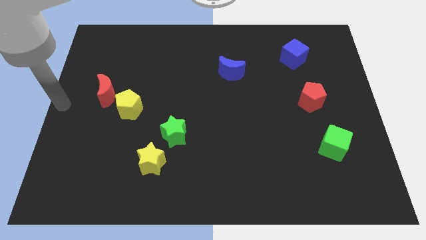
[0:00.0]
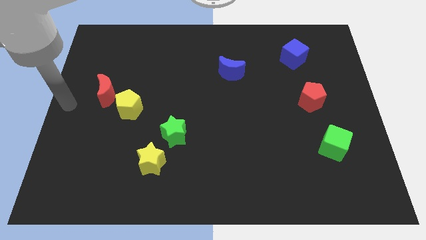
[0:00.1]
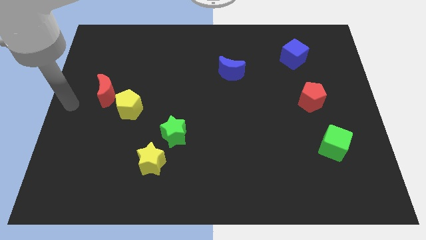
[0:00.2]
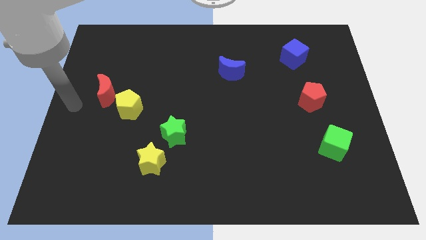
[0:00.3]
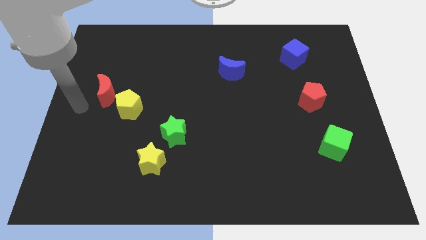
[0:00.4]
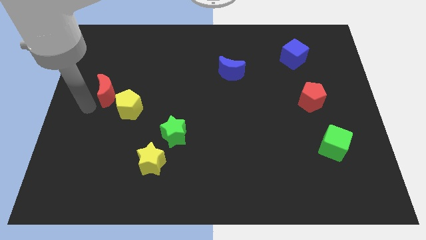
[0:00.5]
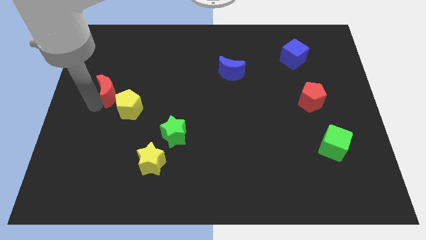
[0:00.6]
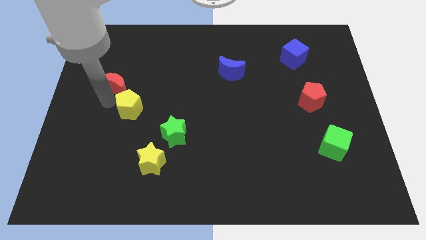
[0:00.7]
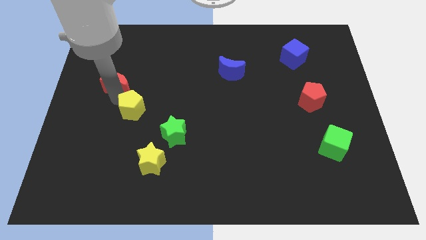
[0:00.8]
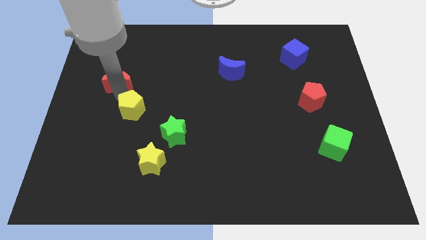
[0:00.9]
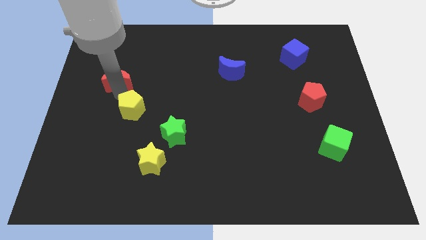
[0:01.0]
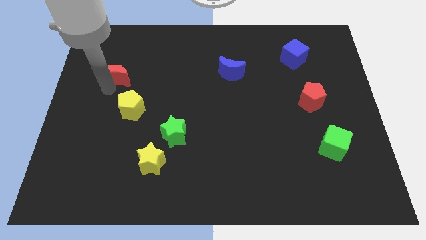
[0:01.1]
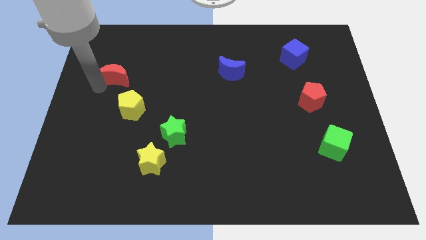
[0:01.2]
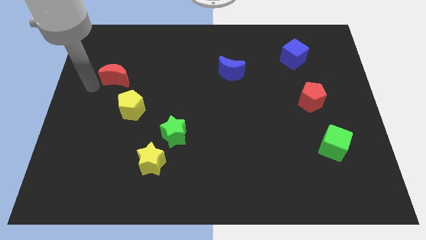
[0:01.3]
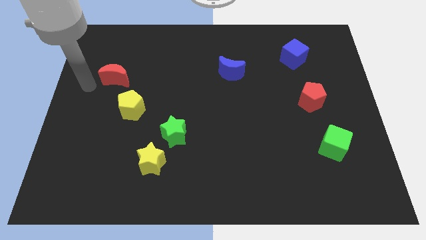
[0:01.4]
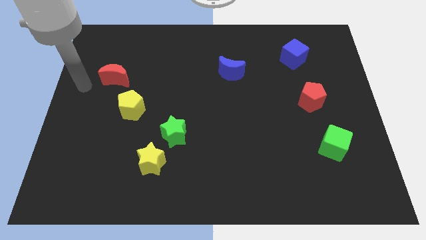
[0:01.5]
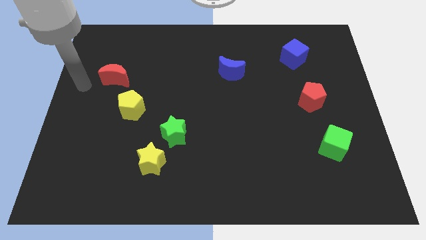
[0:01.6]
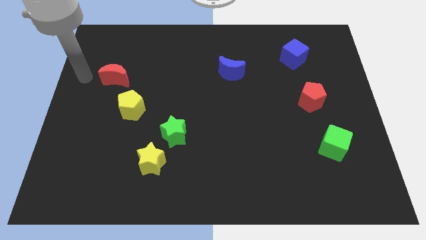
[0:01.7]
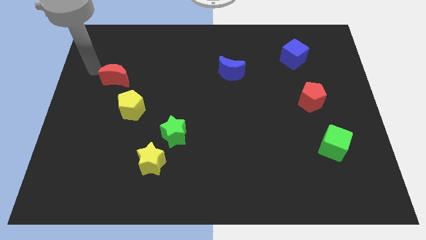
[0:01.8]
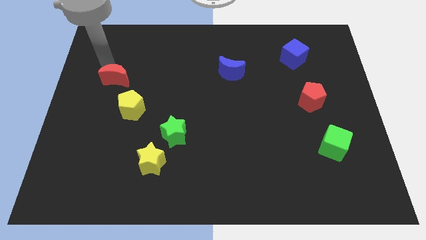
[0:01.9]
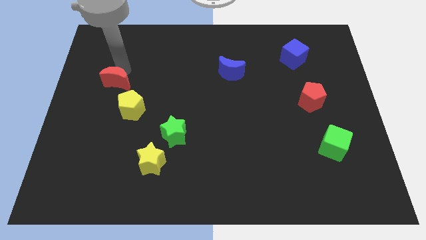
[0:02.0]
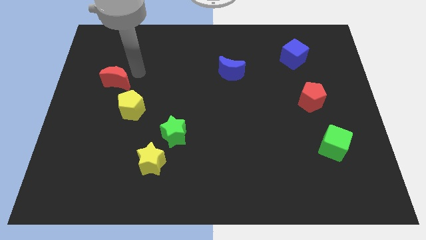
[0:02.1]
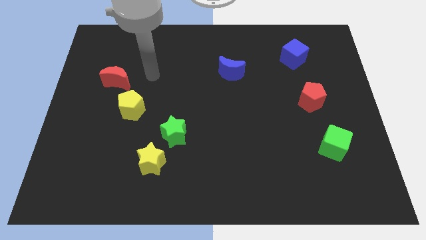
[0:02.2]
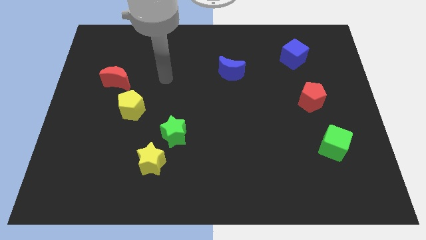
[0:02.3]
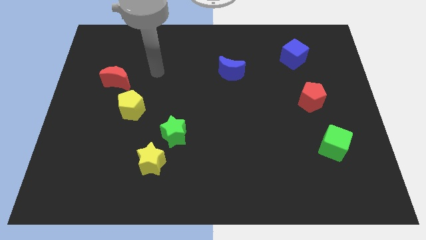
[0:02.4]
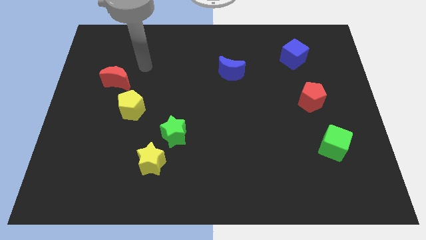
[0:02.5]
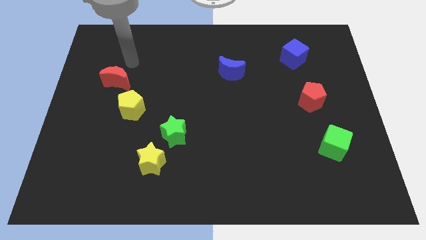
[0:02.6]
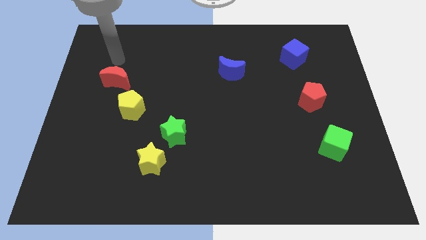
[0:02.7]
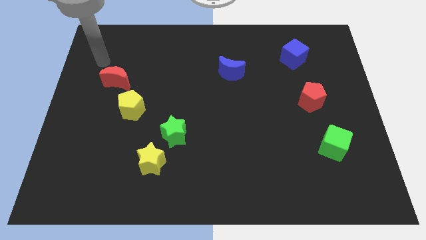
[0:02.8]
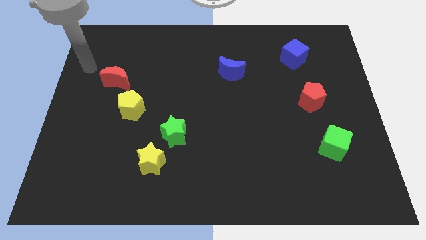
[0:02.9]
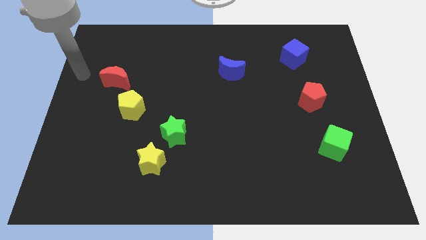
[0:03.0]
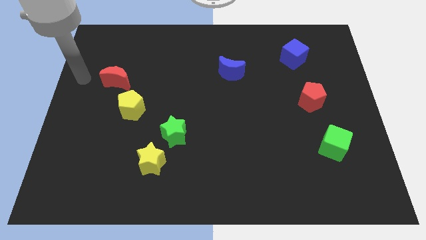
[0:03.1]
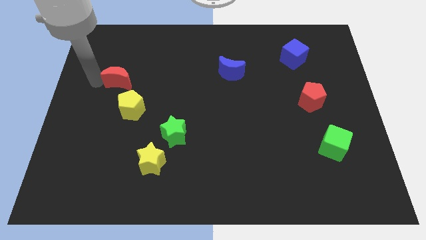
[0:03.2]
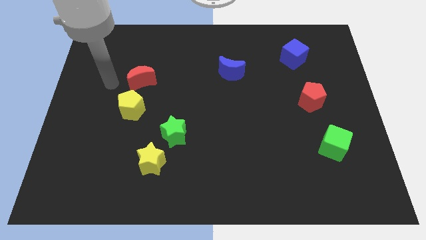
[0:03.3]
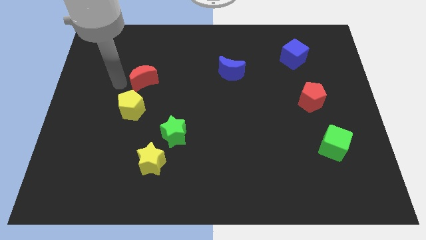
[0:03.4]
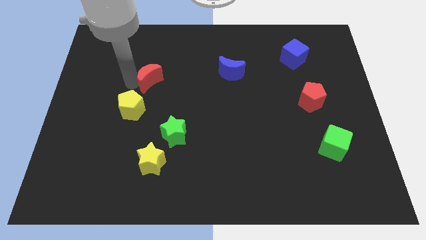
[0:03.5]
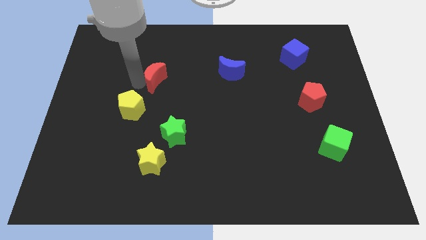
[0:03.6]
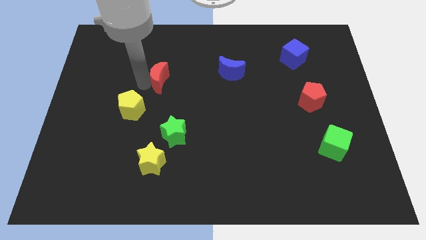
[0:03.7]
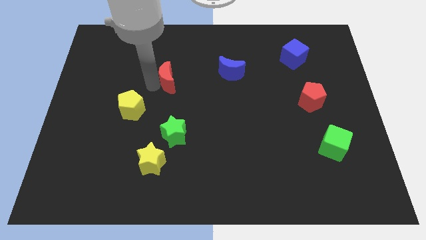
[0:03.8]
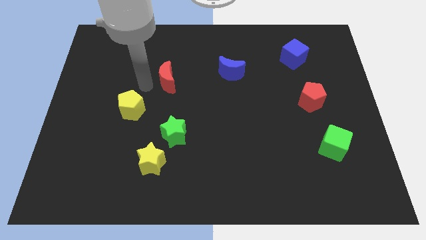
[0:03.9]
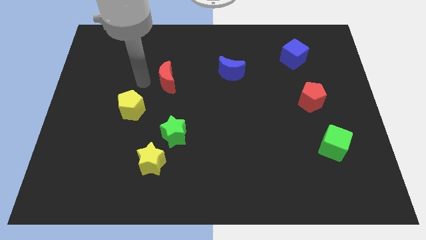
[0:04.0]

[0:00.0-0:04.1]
place the red crescent at the top side of the green star

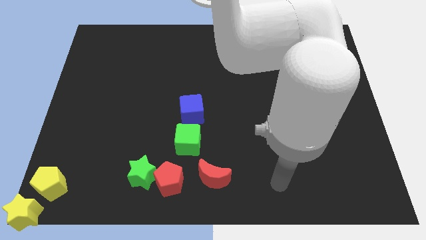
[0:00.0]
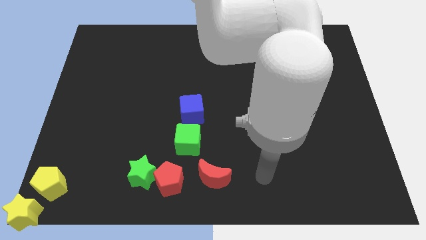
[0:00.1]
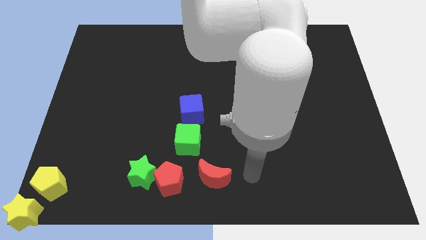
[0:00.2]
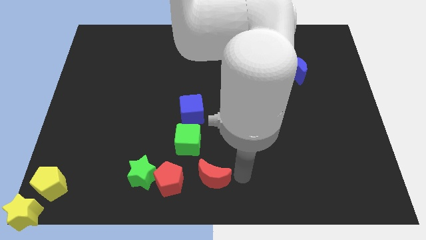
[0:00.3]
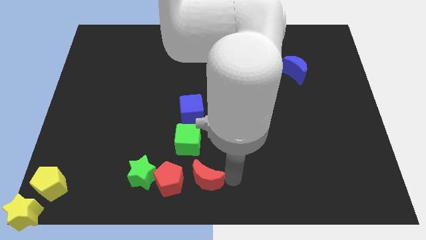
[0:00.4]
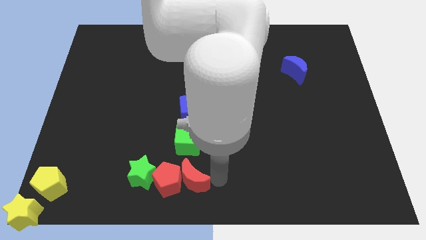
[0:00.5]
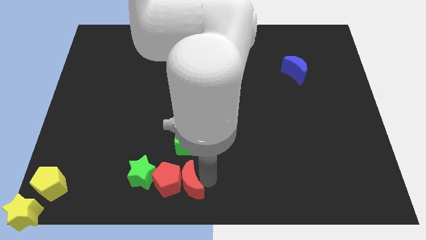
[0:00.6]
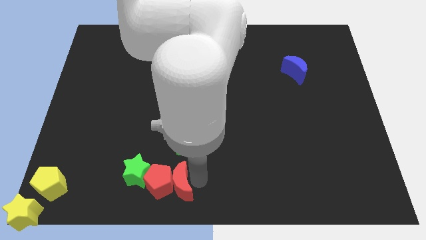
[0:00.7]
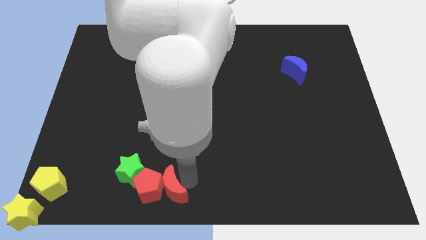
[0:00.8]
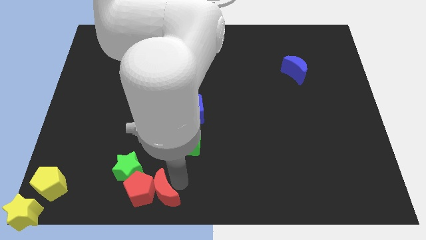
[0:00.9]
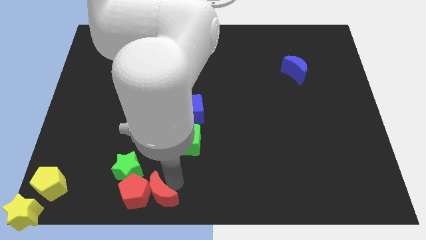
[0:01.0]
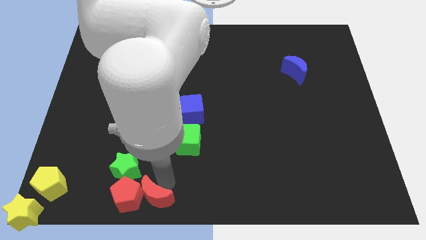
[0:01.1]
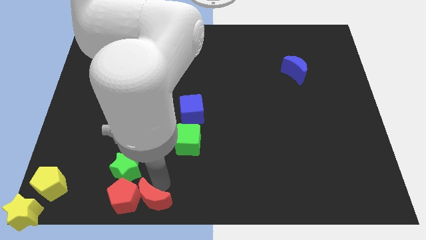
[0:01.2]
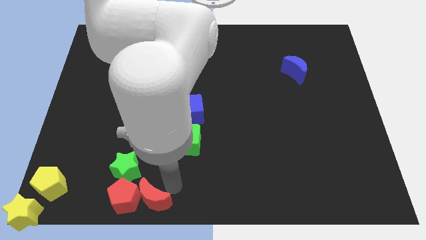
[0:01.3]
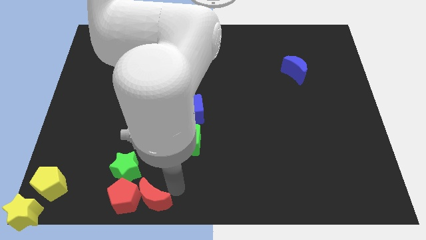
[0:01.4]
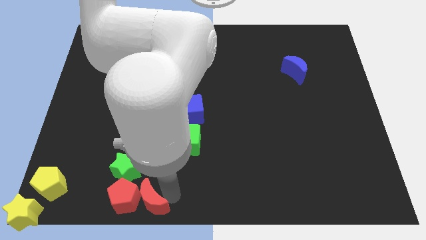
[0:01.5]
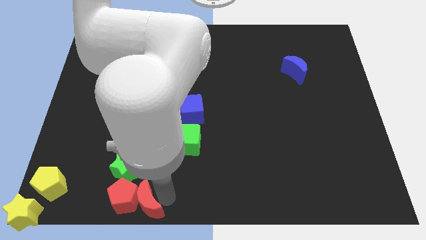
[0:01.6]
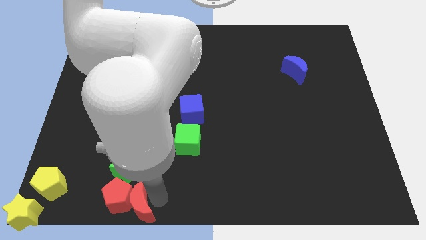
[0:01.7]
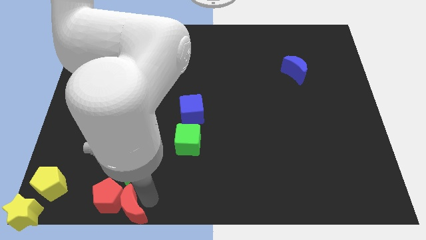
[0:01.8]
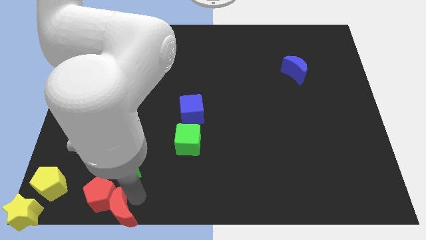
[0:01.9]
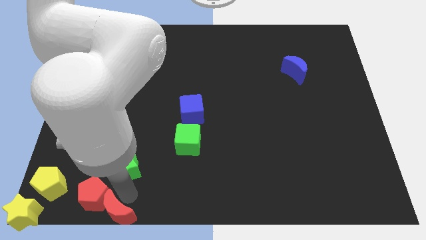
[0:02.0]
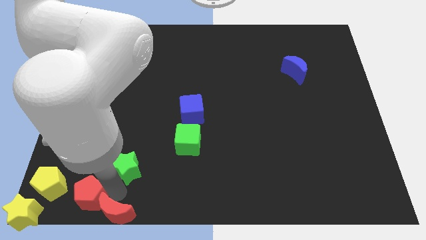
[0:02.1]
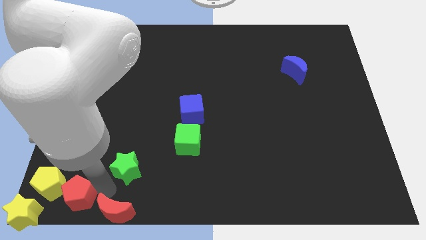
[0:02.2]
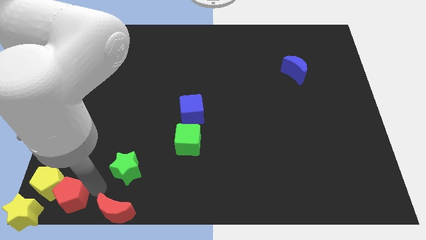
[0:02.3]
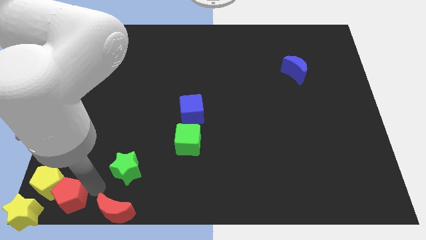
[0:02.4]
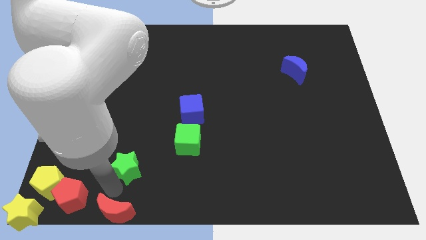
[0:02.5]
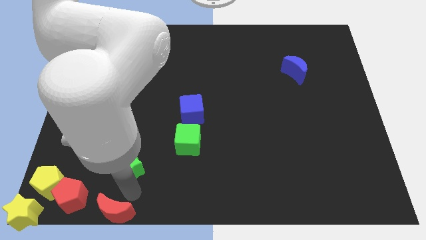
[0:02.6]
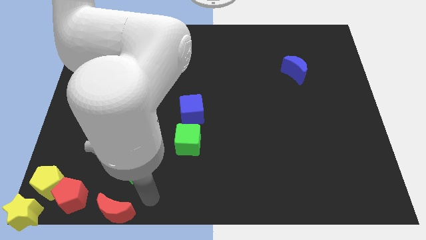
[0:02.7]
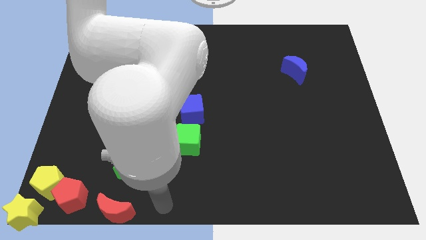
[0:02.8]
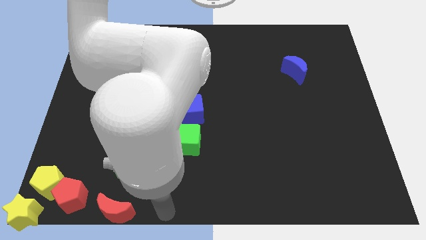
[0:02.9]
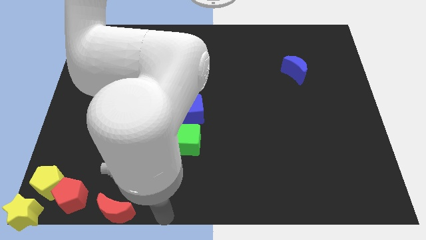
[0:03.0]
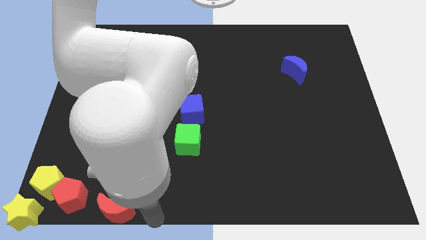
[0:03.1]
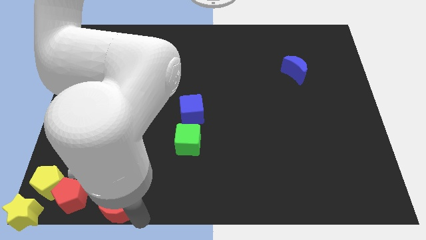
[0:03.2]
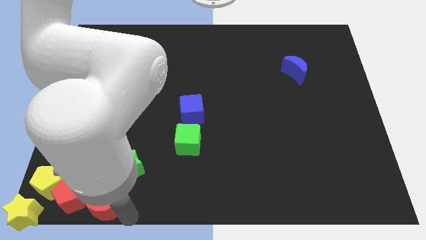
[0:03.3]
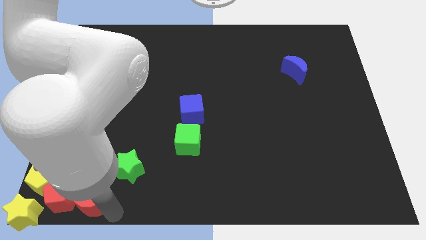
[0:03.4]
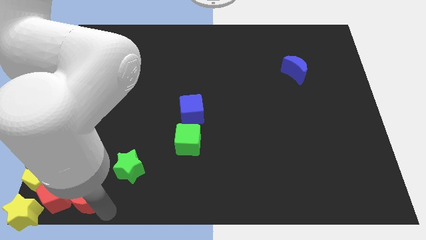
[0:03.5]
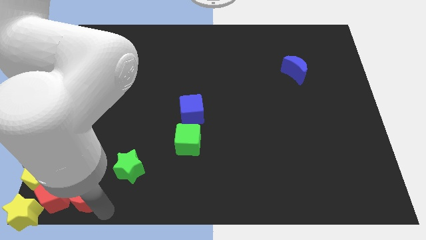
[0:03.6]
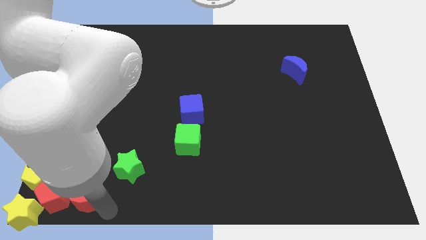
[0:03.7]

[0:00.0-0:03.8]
move the red moon right to the red pentagon

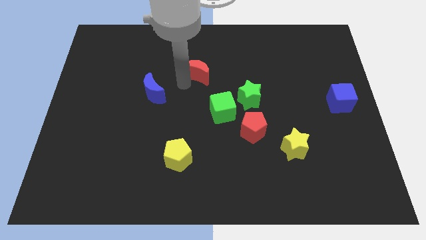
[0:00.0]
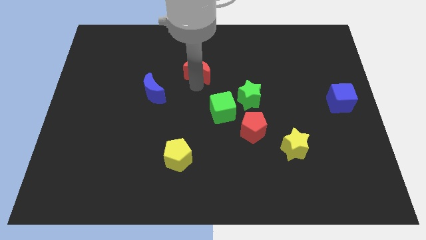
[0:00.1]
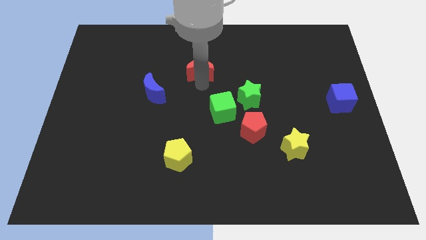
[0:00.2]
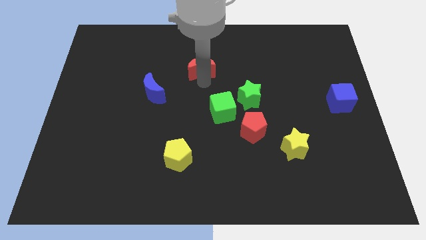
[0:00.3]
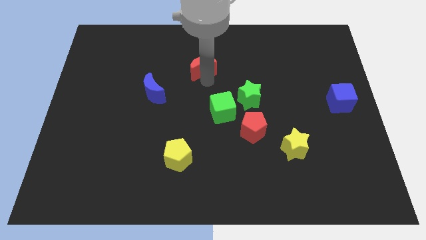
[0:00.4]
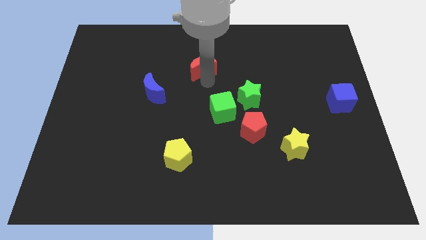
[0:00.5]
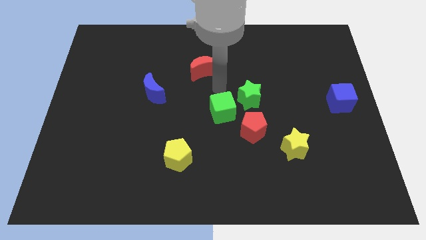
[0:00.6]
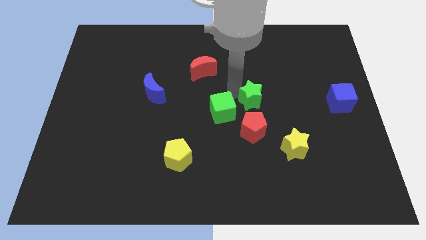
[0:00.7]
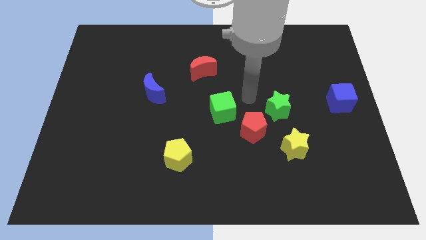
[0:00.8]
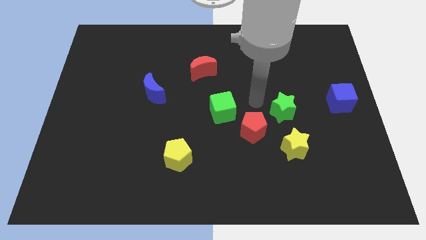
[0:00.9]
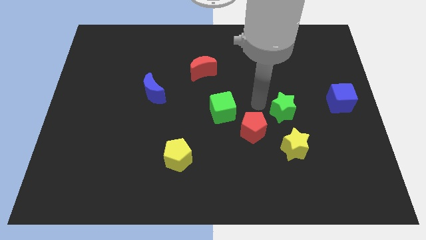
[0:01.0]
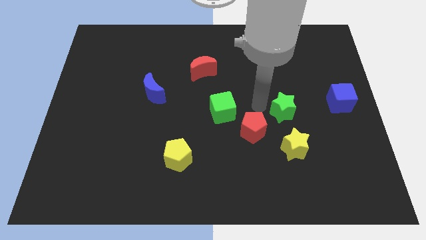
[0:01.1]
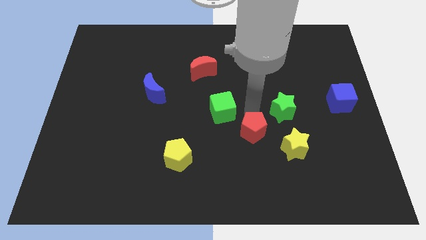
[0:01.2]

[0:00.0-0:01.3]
put the green star above the yellow star
